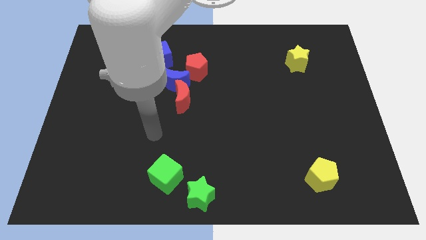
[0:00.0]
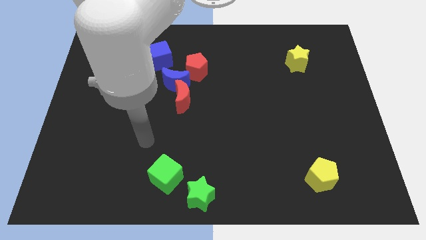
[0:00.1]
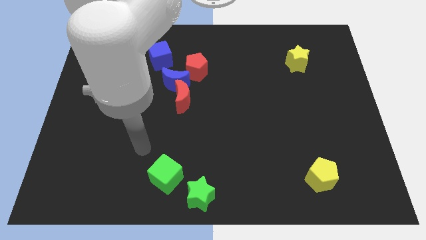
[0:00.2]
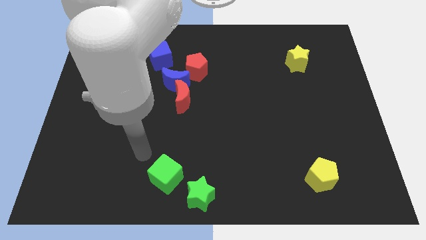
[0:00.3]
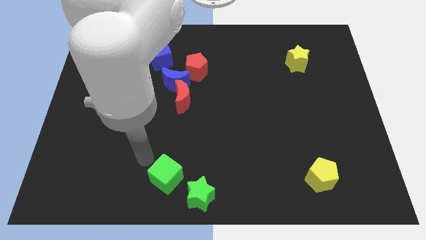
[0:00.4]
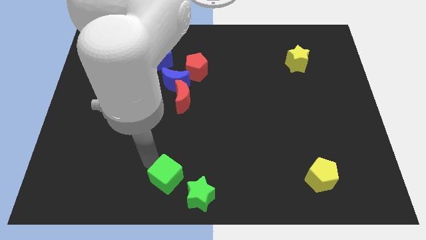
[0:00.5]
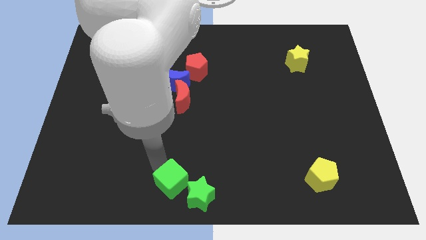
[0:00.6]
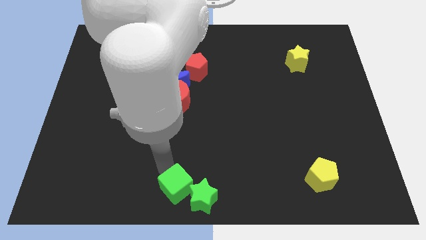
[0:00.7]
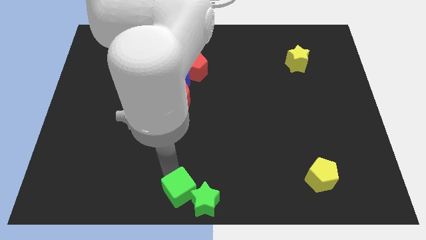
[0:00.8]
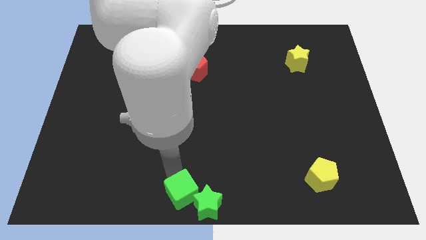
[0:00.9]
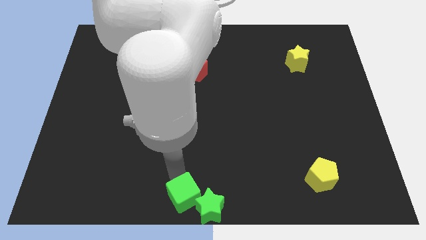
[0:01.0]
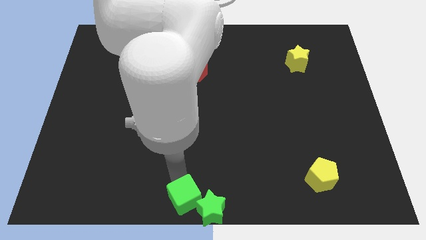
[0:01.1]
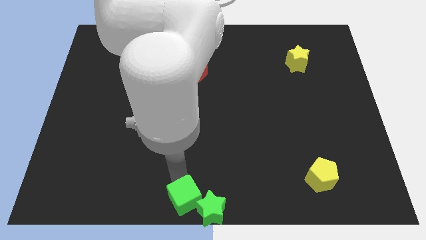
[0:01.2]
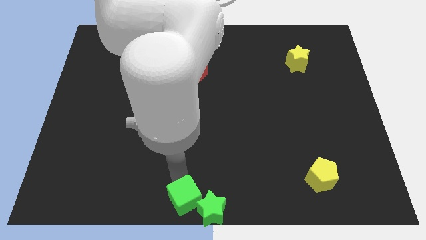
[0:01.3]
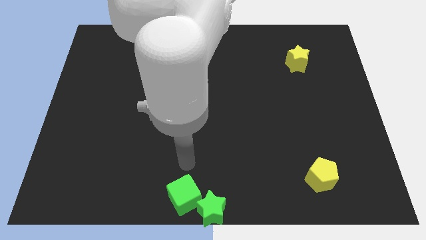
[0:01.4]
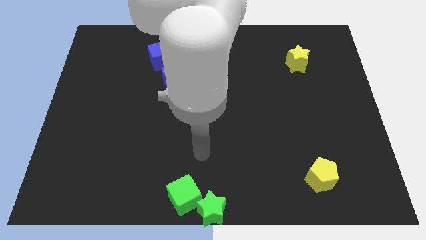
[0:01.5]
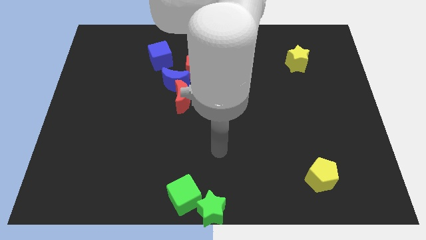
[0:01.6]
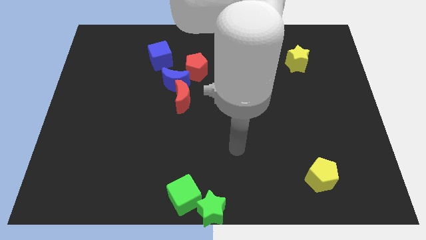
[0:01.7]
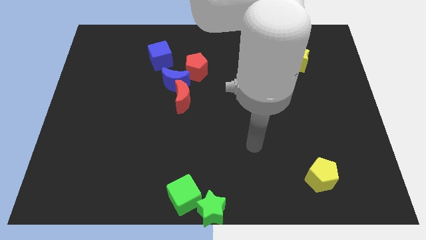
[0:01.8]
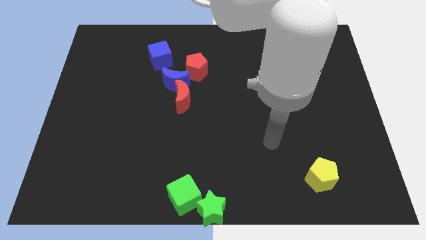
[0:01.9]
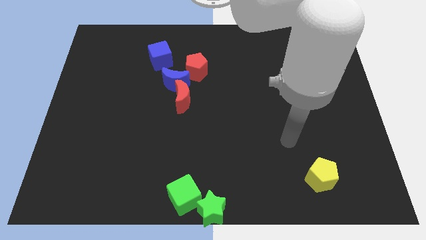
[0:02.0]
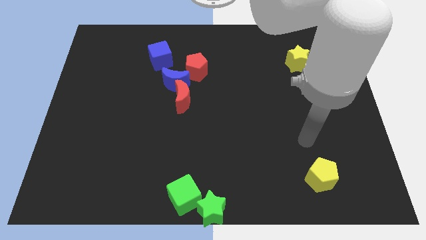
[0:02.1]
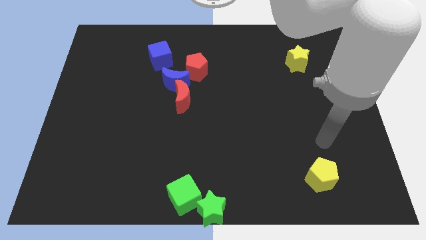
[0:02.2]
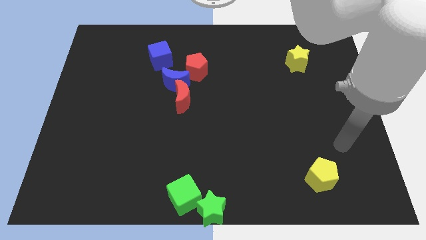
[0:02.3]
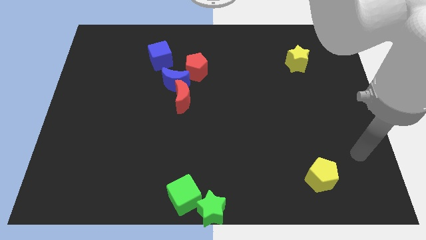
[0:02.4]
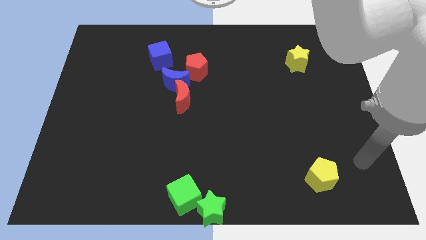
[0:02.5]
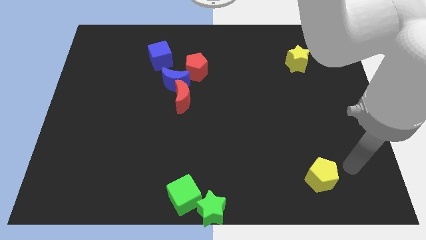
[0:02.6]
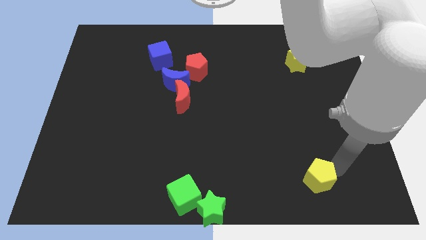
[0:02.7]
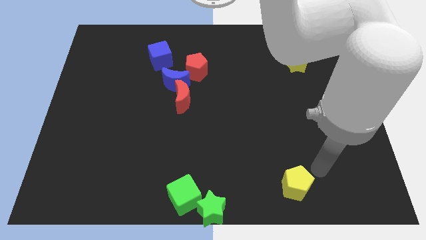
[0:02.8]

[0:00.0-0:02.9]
place the arm near the yellow pentagon

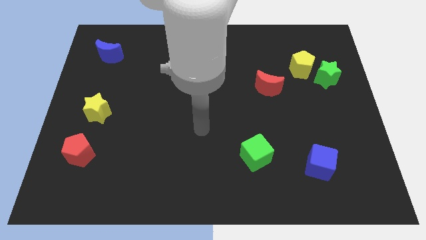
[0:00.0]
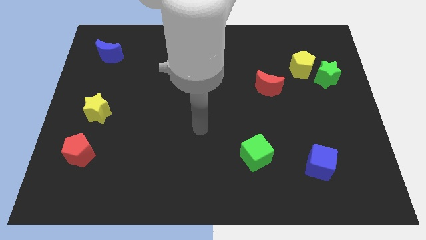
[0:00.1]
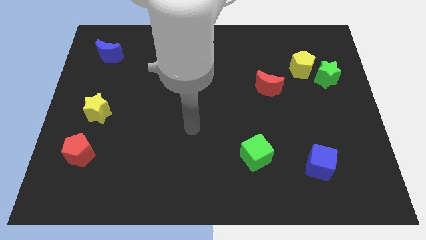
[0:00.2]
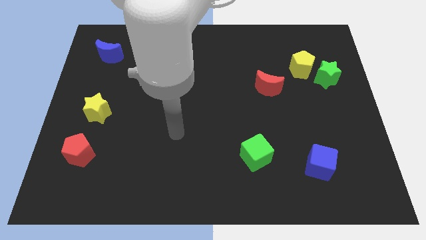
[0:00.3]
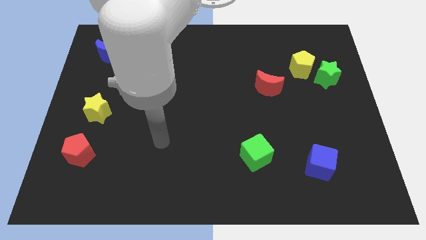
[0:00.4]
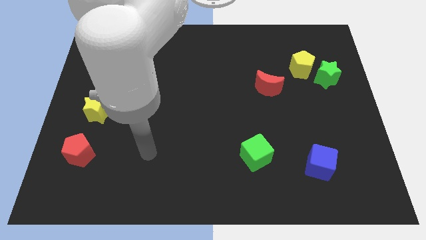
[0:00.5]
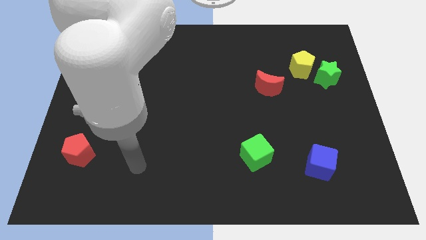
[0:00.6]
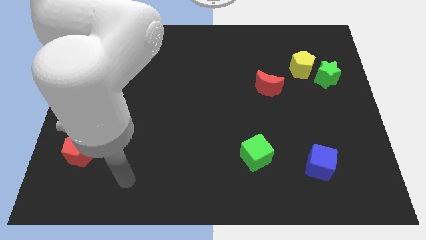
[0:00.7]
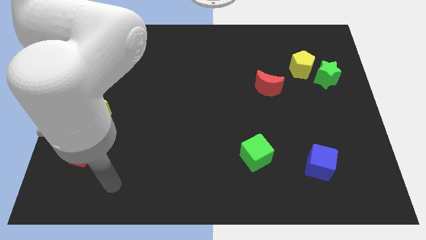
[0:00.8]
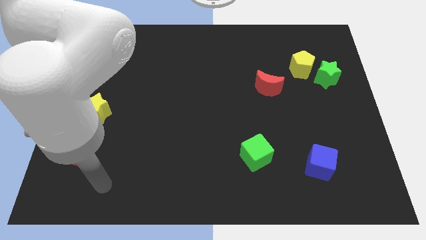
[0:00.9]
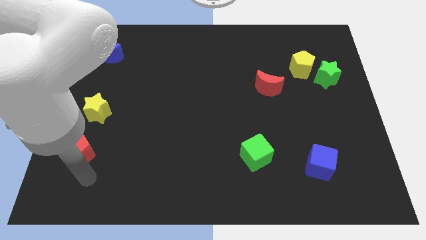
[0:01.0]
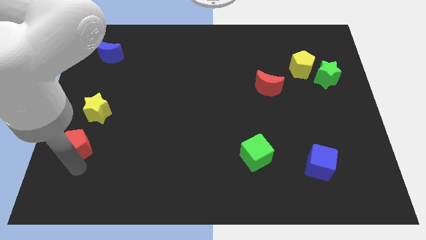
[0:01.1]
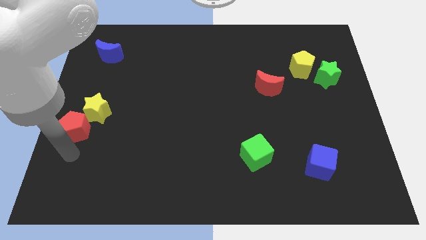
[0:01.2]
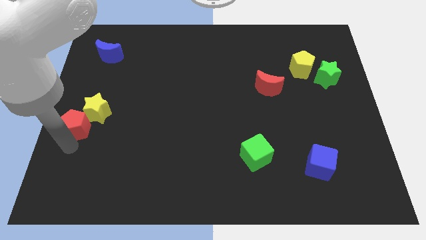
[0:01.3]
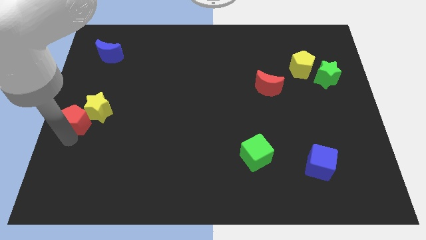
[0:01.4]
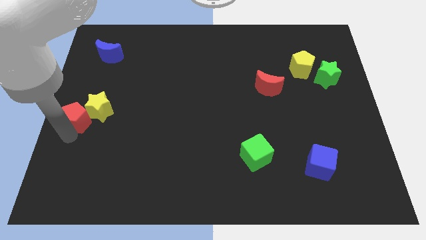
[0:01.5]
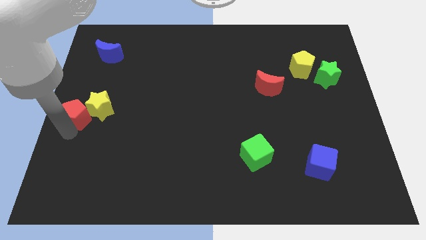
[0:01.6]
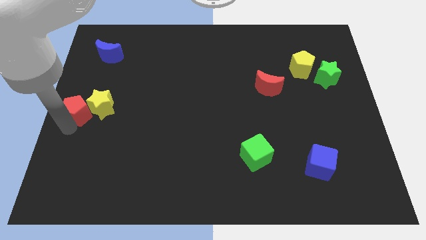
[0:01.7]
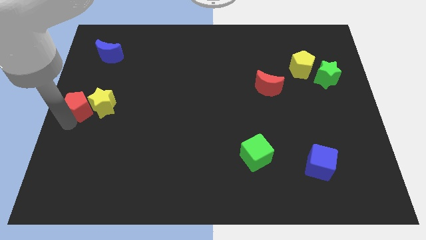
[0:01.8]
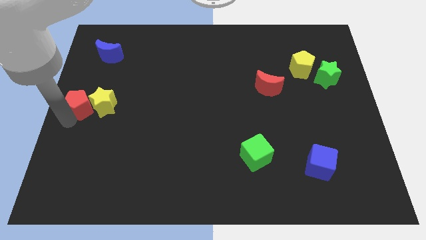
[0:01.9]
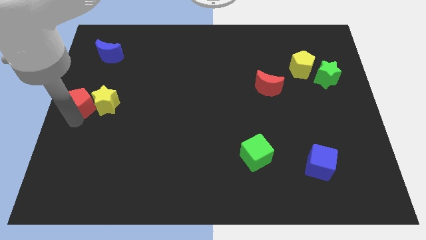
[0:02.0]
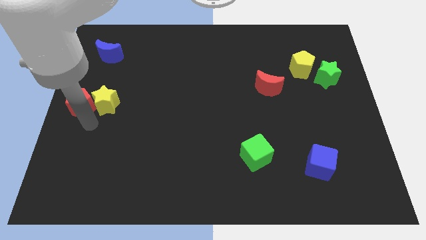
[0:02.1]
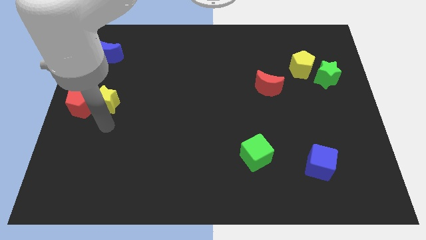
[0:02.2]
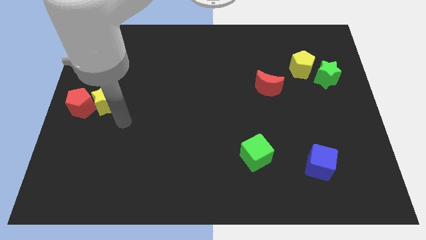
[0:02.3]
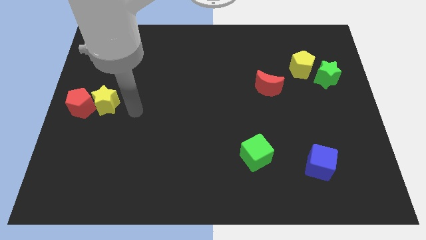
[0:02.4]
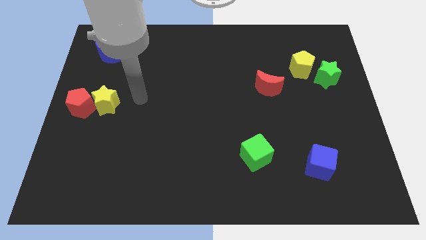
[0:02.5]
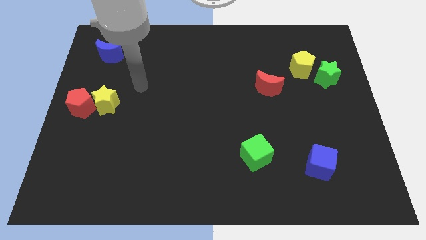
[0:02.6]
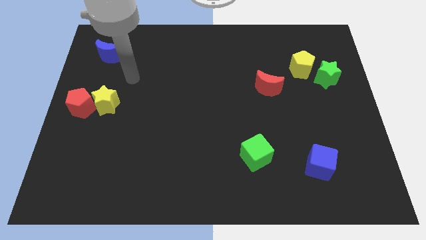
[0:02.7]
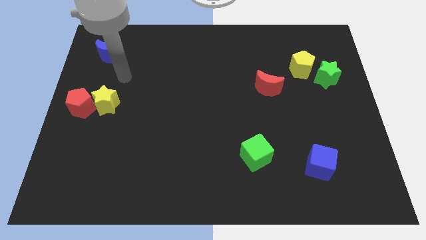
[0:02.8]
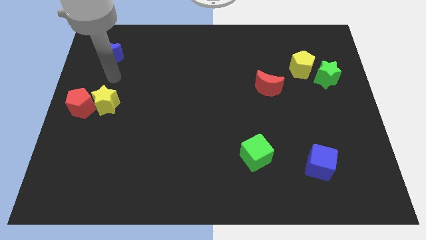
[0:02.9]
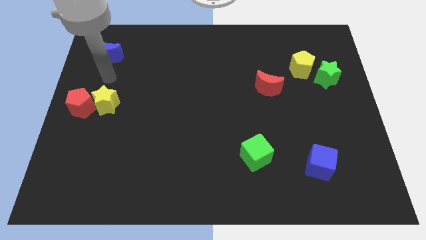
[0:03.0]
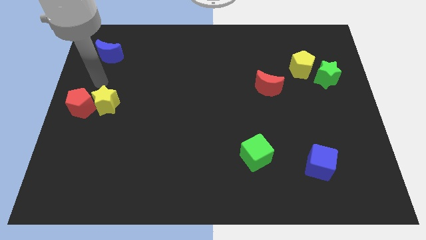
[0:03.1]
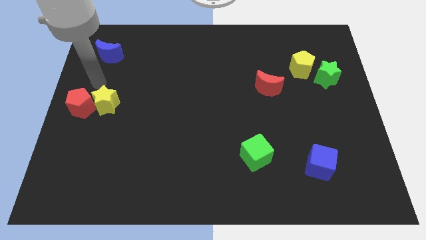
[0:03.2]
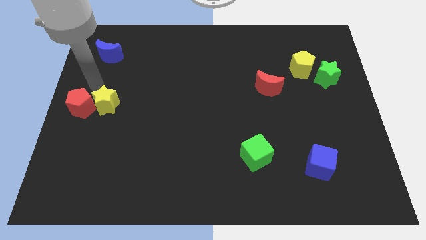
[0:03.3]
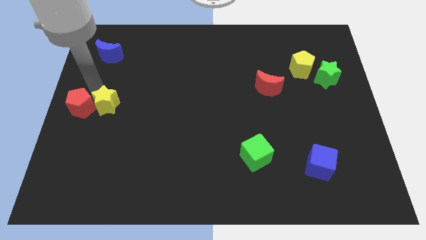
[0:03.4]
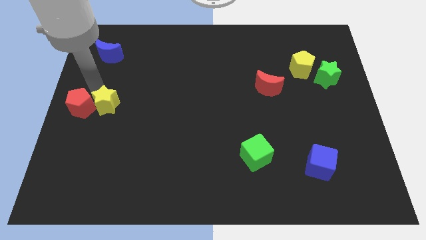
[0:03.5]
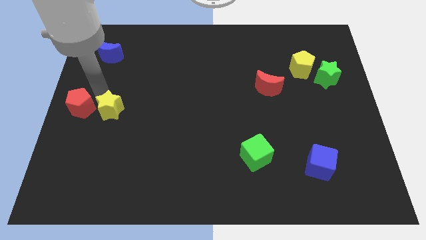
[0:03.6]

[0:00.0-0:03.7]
point your arm above the yellow star

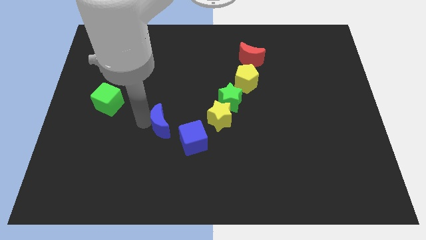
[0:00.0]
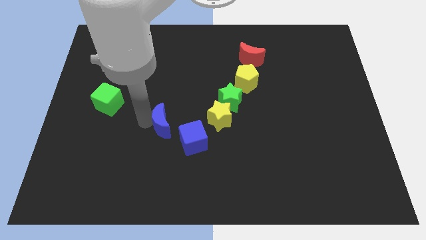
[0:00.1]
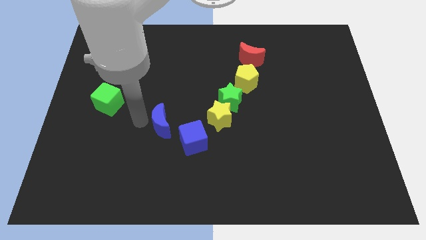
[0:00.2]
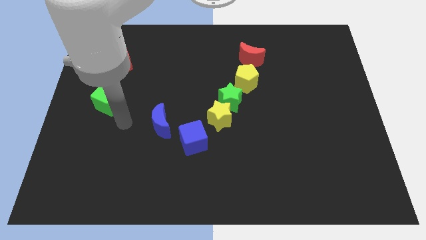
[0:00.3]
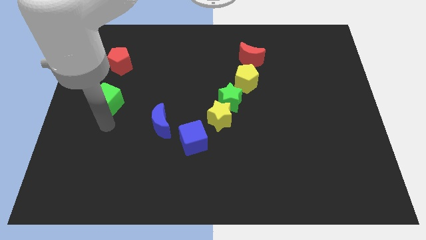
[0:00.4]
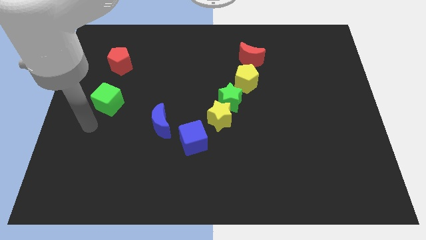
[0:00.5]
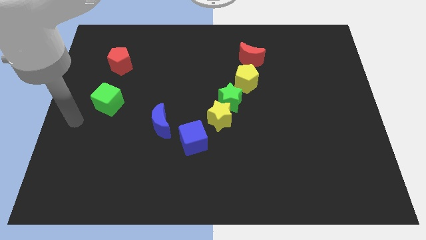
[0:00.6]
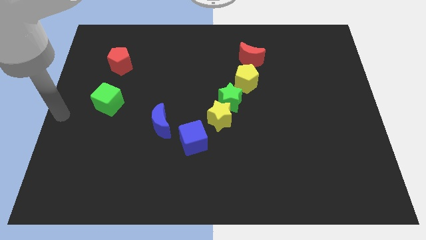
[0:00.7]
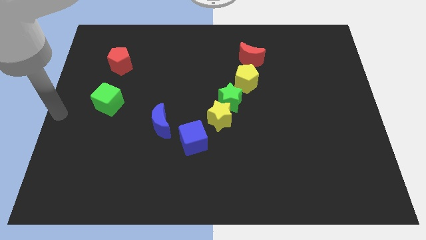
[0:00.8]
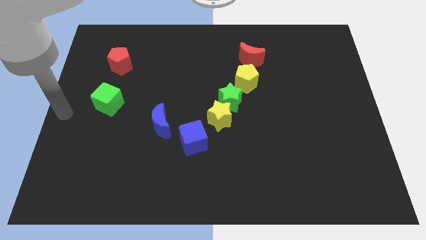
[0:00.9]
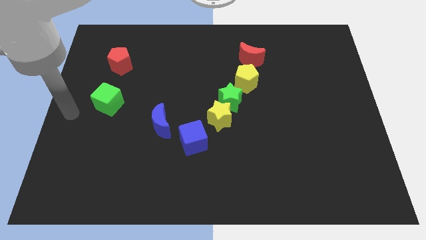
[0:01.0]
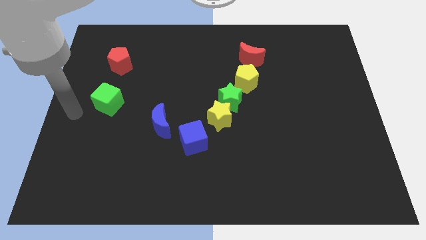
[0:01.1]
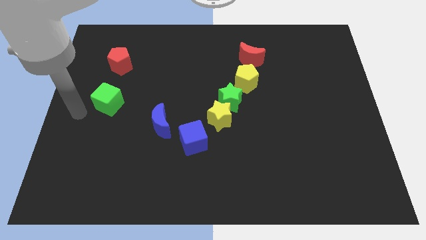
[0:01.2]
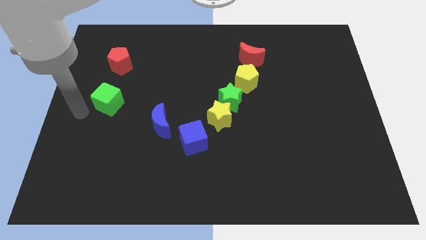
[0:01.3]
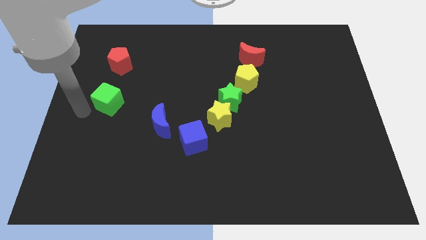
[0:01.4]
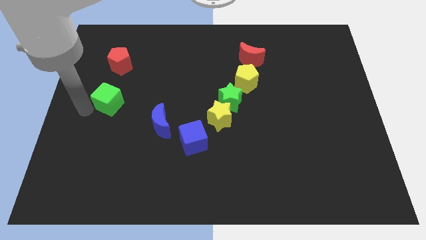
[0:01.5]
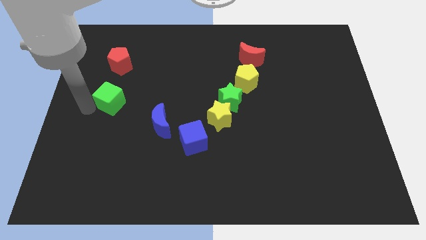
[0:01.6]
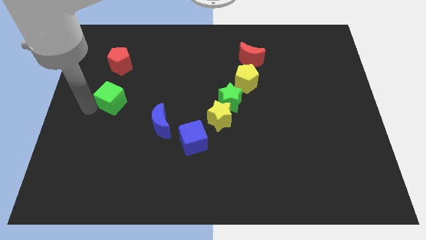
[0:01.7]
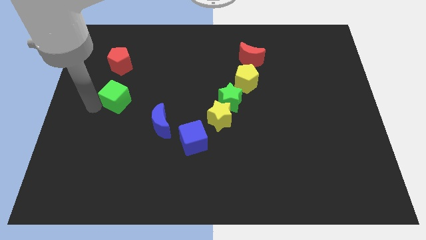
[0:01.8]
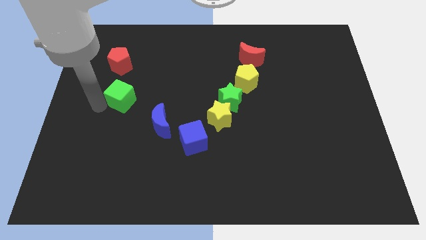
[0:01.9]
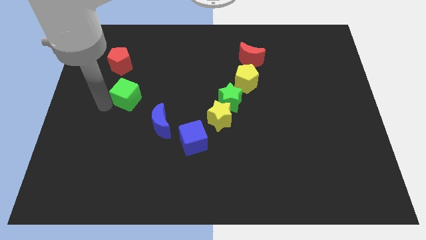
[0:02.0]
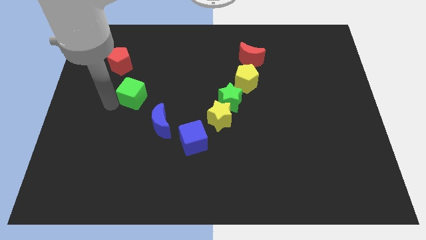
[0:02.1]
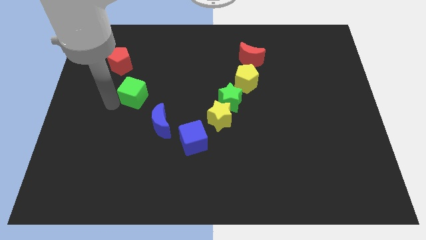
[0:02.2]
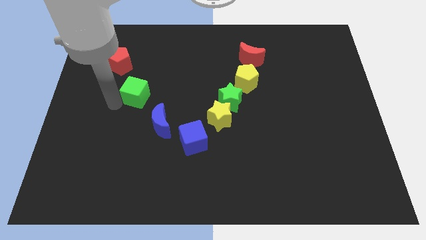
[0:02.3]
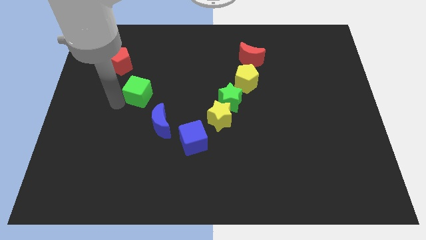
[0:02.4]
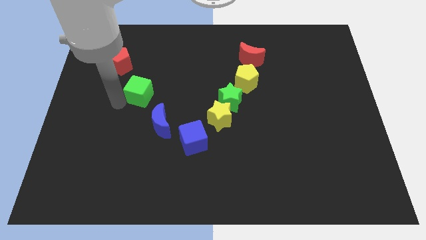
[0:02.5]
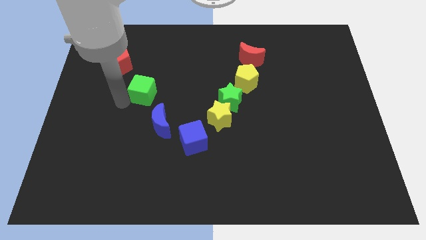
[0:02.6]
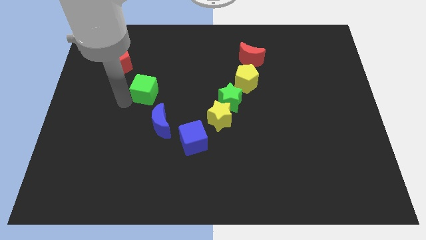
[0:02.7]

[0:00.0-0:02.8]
push the green cube to the top left side of the blue moon
